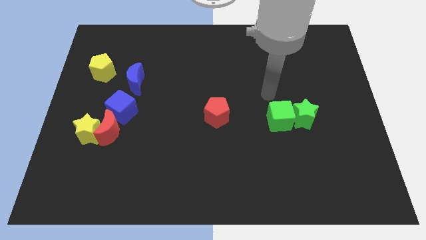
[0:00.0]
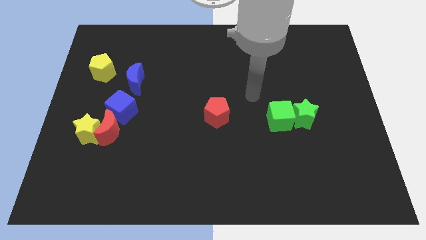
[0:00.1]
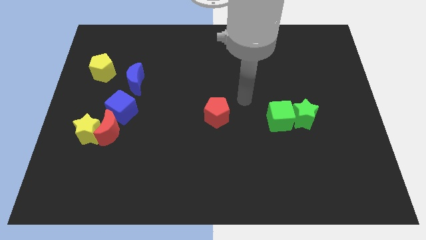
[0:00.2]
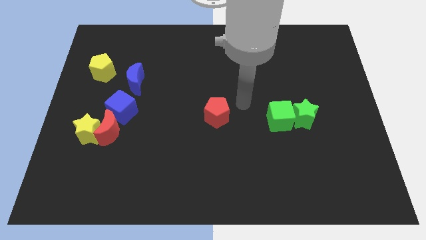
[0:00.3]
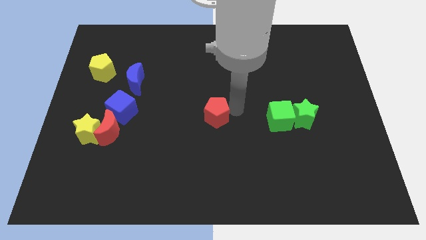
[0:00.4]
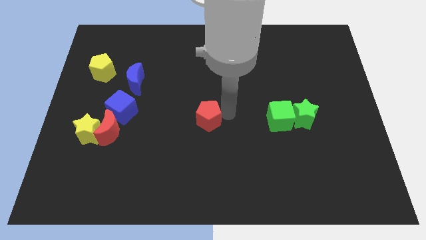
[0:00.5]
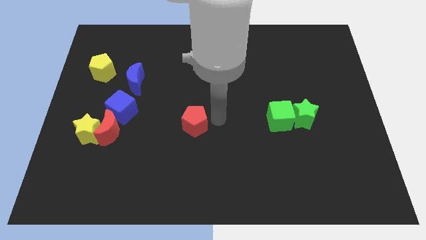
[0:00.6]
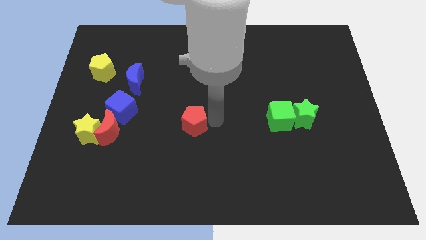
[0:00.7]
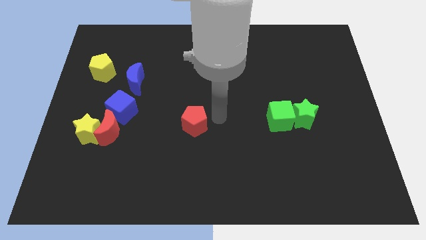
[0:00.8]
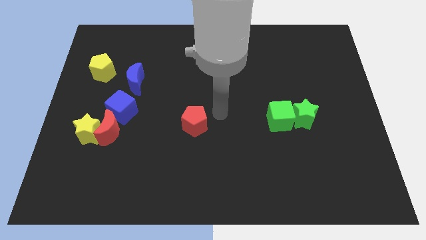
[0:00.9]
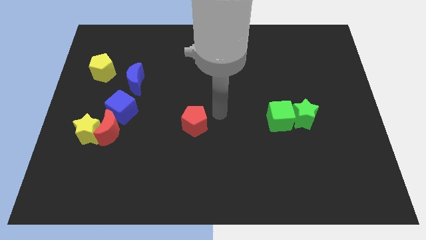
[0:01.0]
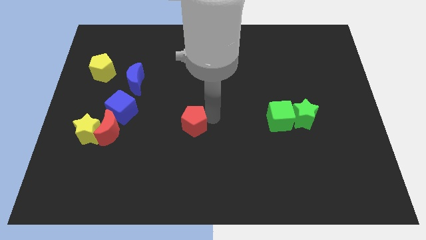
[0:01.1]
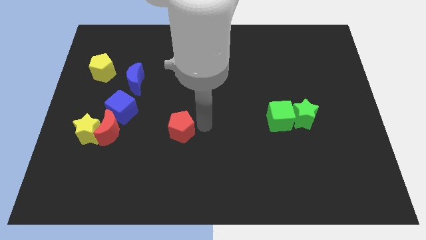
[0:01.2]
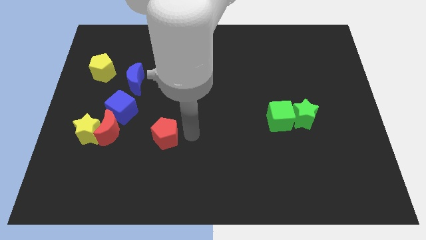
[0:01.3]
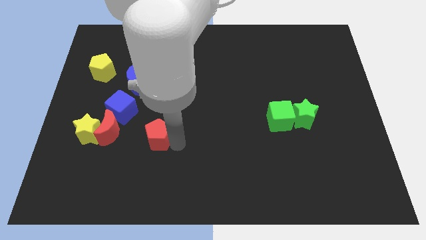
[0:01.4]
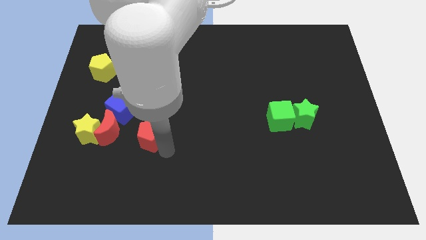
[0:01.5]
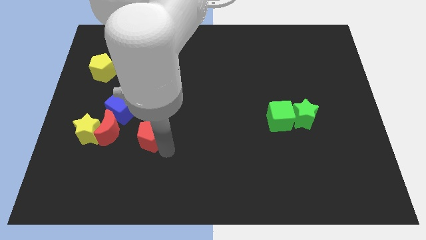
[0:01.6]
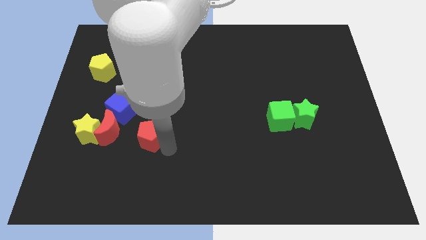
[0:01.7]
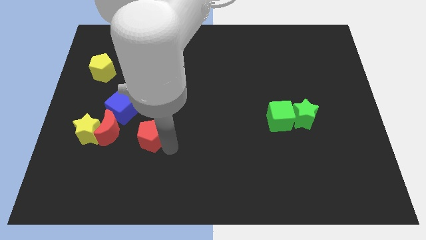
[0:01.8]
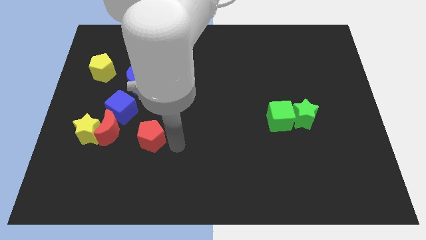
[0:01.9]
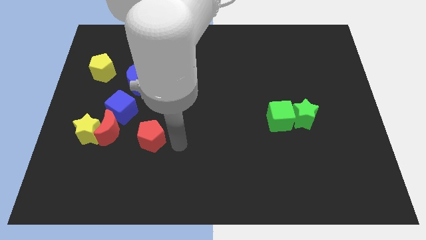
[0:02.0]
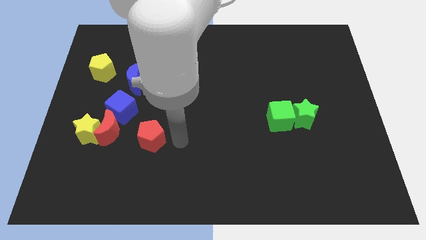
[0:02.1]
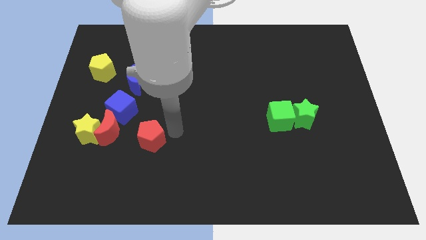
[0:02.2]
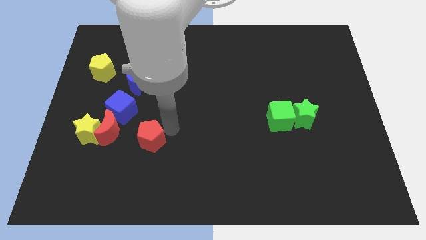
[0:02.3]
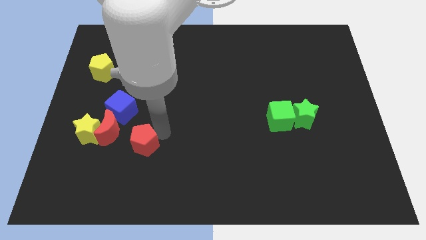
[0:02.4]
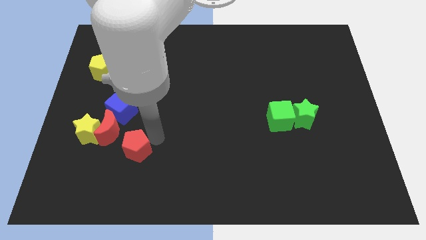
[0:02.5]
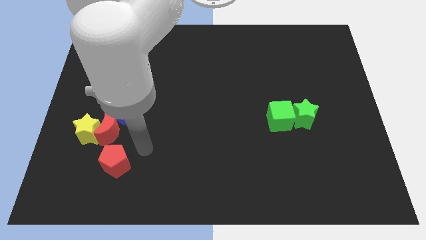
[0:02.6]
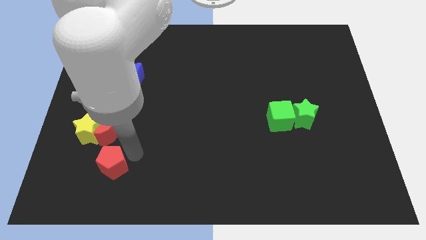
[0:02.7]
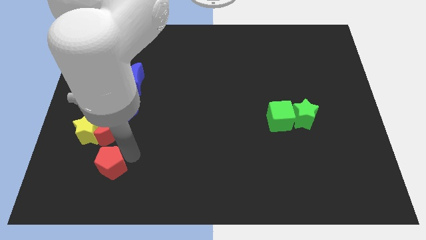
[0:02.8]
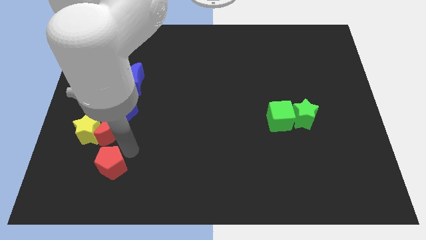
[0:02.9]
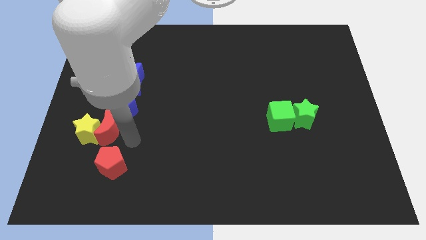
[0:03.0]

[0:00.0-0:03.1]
place the red pentagon below to the red crescent

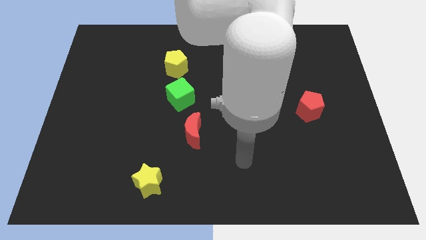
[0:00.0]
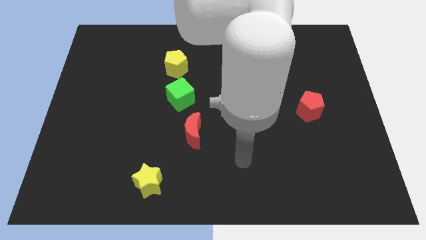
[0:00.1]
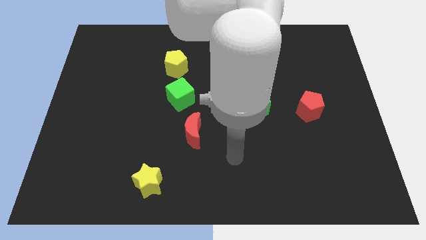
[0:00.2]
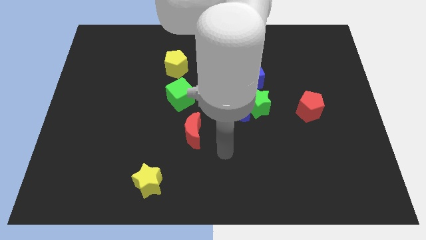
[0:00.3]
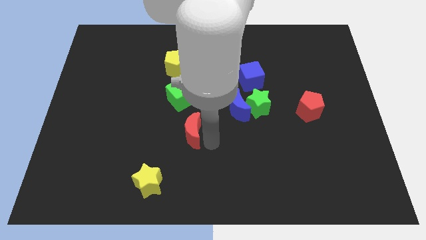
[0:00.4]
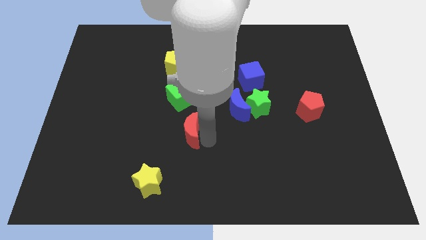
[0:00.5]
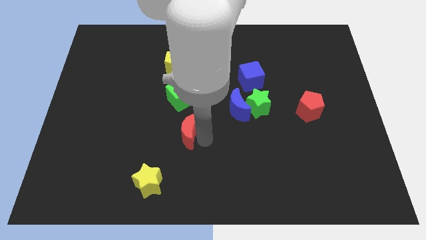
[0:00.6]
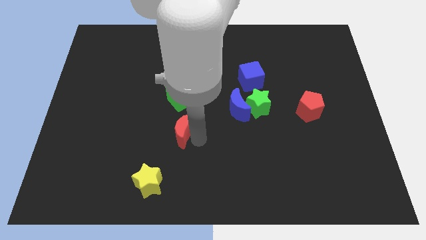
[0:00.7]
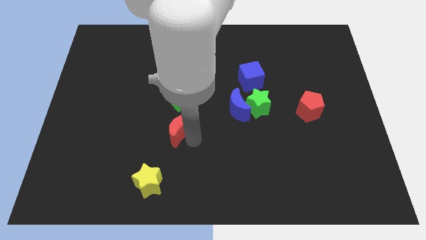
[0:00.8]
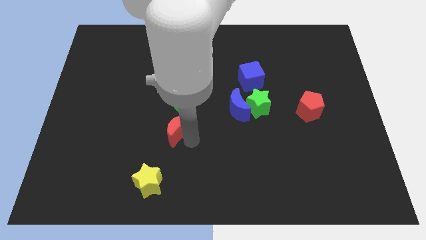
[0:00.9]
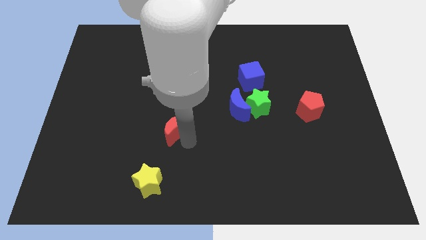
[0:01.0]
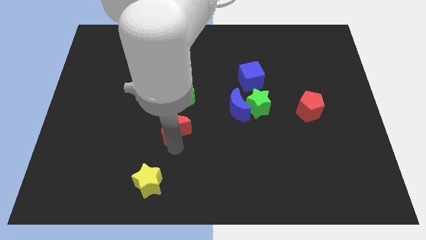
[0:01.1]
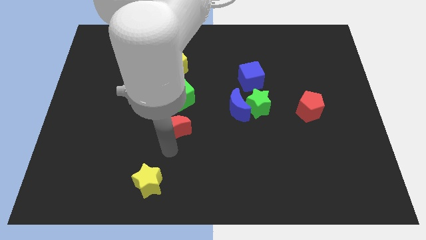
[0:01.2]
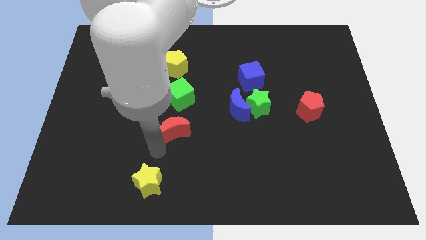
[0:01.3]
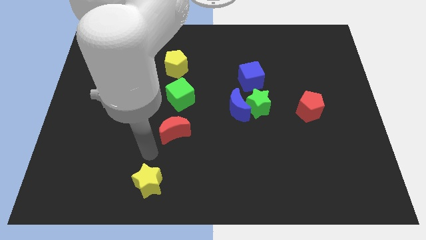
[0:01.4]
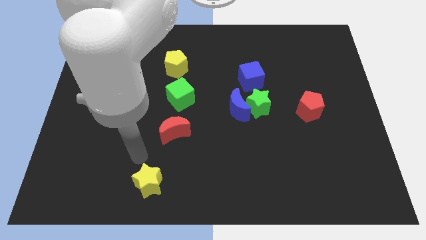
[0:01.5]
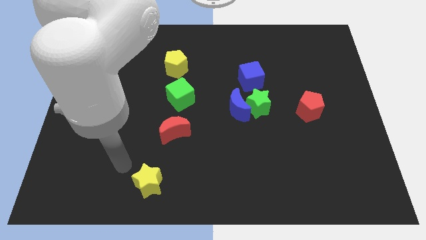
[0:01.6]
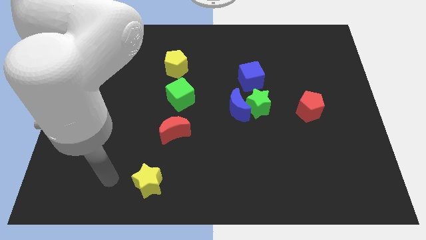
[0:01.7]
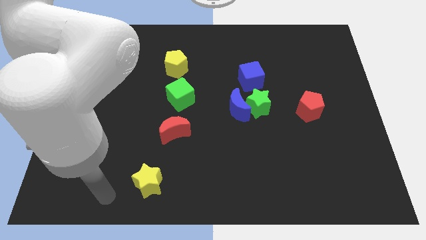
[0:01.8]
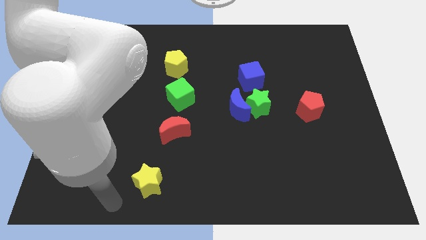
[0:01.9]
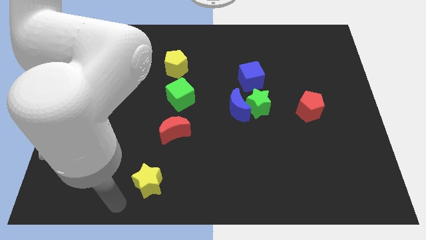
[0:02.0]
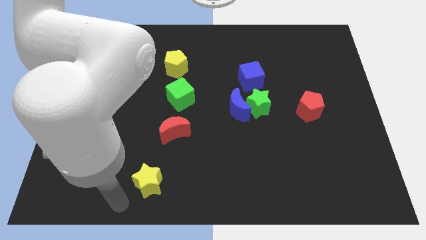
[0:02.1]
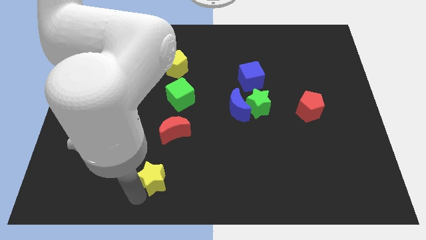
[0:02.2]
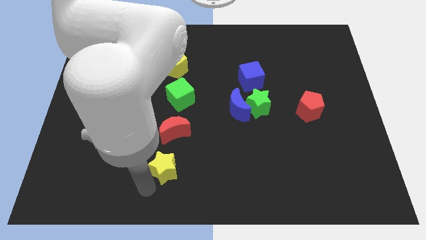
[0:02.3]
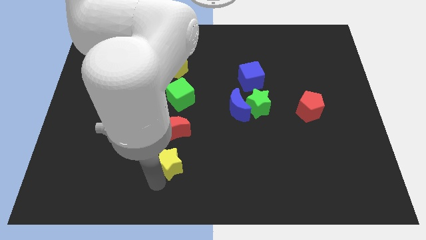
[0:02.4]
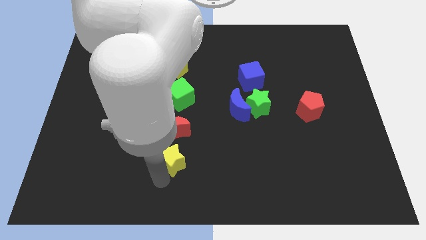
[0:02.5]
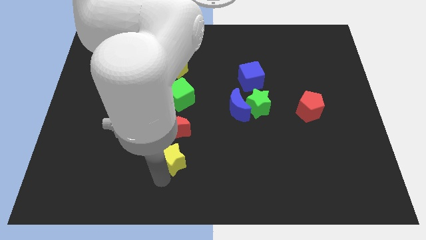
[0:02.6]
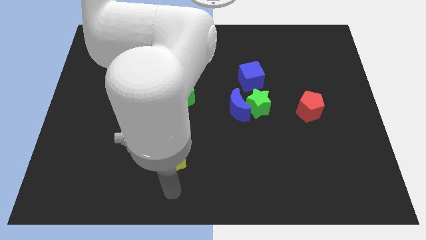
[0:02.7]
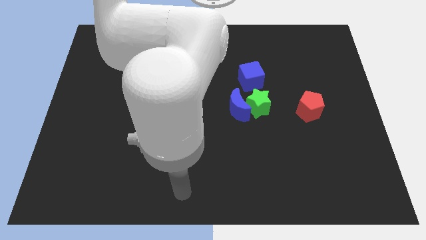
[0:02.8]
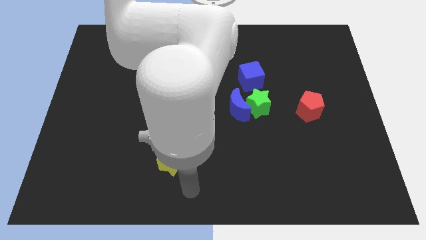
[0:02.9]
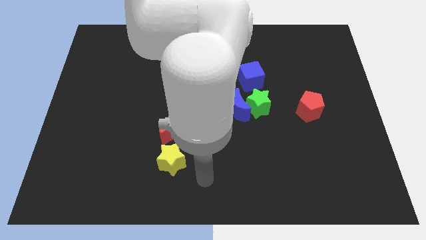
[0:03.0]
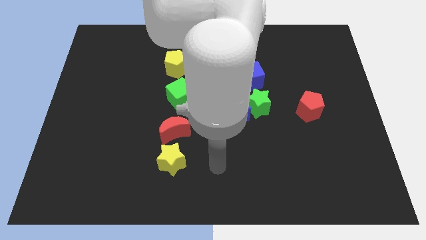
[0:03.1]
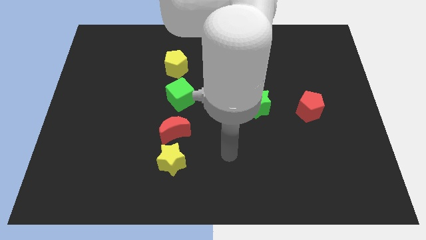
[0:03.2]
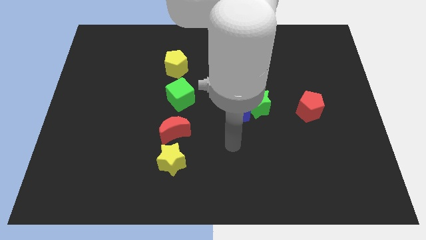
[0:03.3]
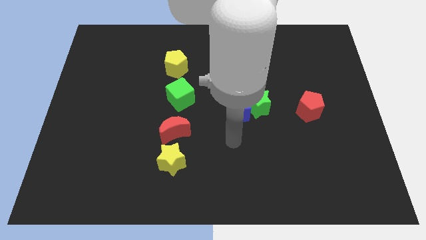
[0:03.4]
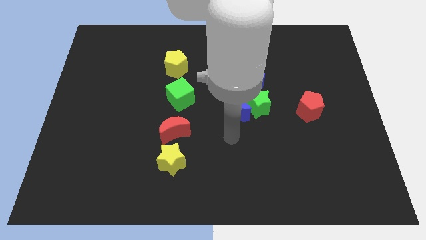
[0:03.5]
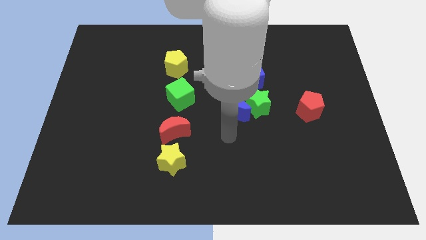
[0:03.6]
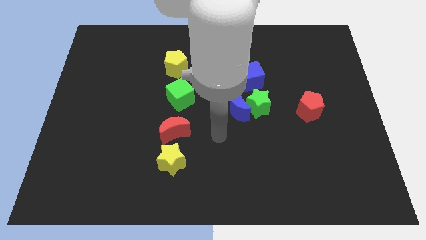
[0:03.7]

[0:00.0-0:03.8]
adjust the red moon and yellow star to form a line

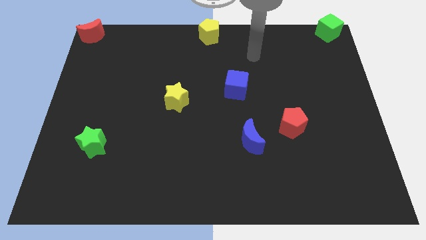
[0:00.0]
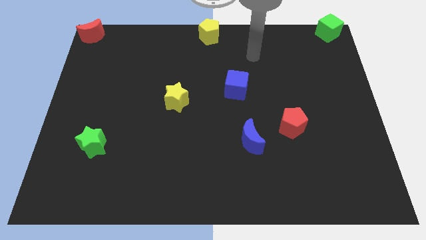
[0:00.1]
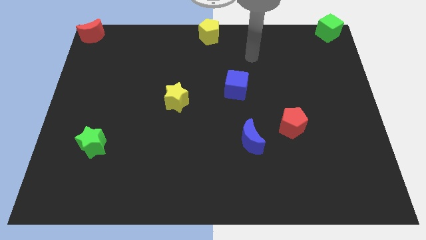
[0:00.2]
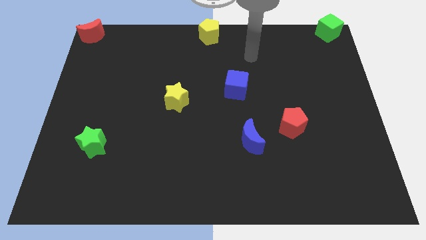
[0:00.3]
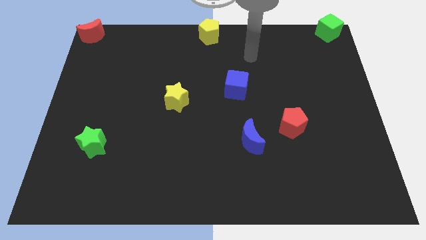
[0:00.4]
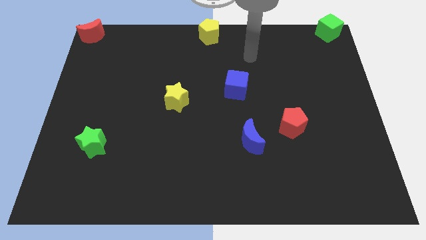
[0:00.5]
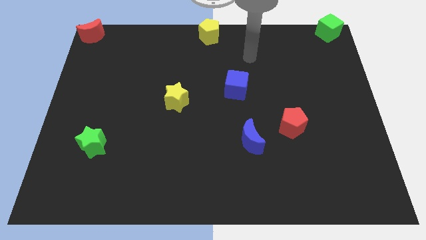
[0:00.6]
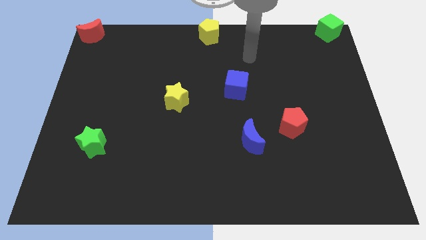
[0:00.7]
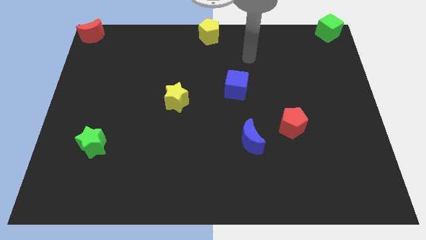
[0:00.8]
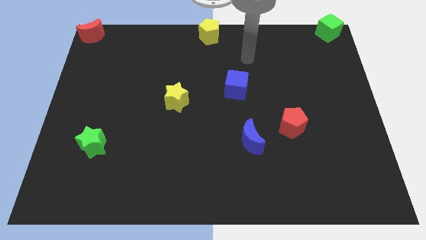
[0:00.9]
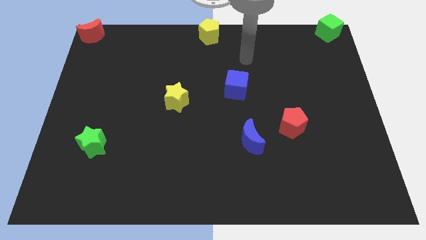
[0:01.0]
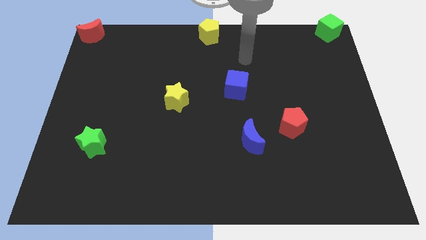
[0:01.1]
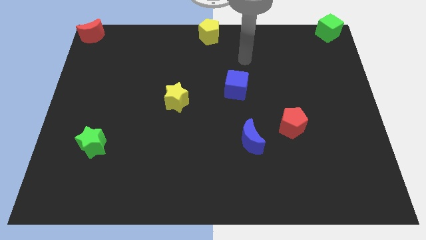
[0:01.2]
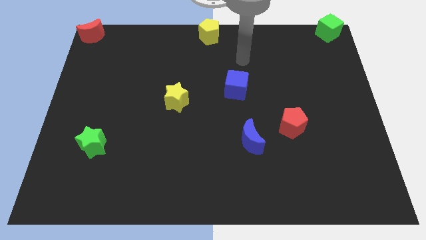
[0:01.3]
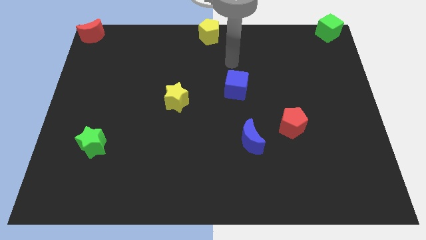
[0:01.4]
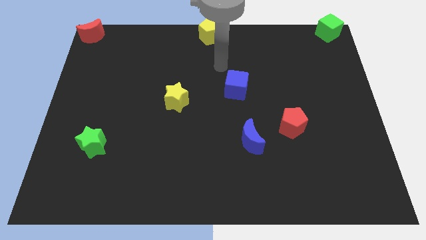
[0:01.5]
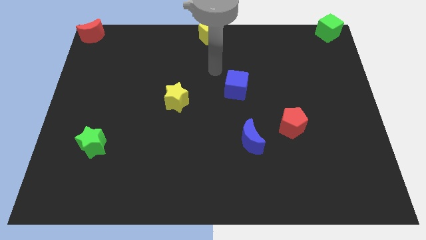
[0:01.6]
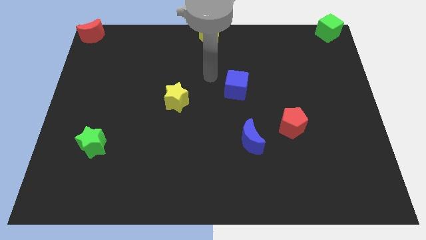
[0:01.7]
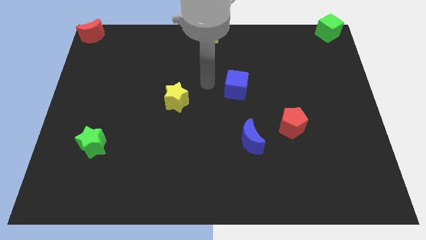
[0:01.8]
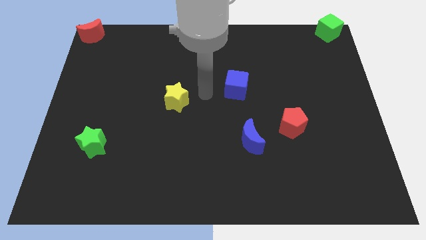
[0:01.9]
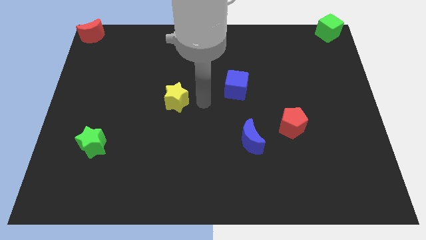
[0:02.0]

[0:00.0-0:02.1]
move your arm to the right side of the yellow star
